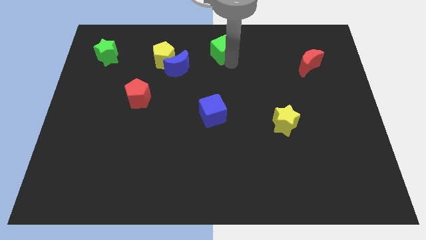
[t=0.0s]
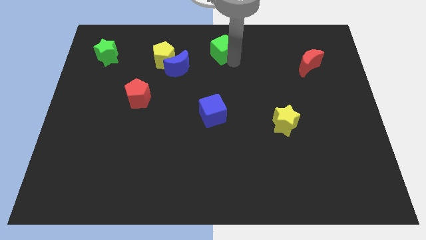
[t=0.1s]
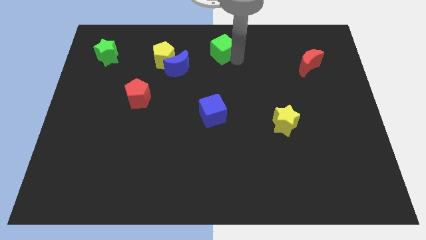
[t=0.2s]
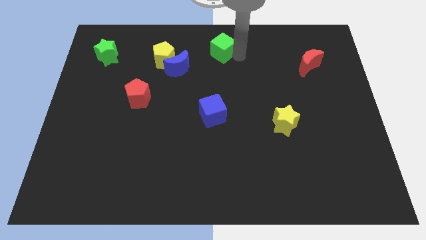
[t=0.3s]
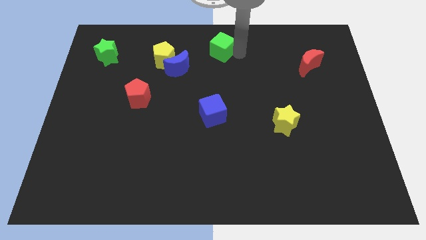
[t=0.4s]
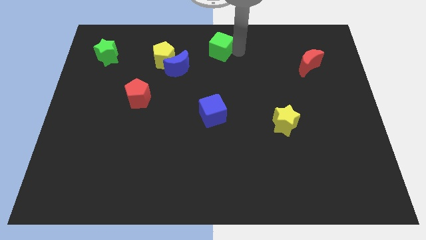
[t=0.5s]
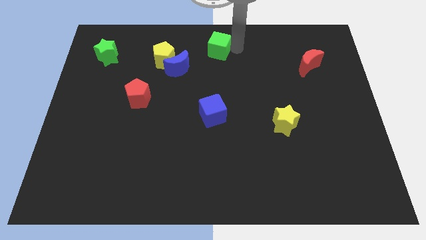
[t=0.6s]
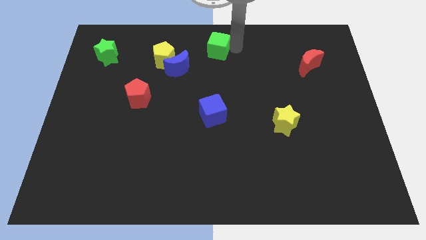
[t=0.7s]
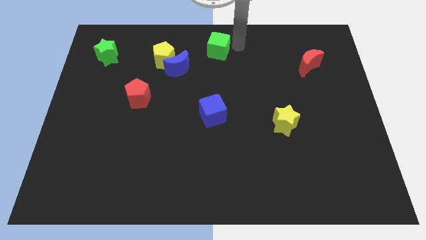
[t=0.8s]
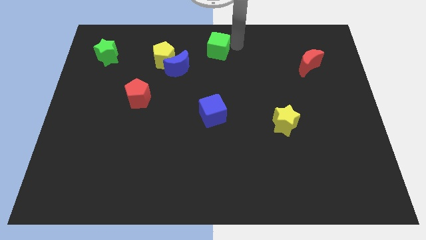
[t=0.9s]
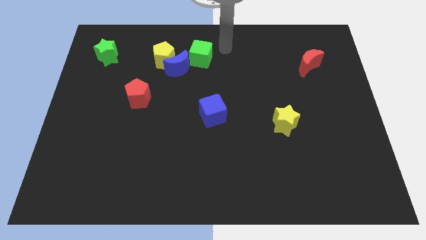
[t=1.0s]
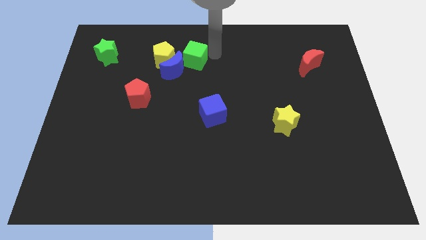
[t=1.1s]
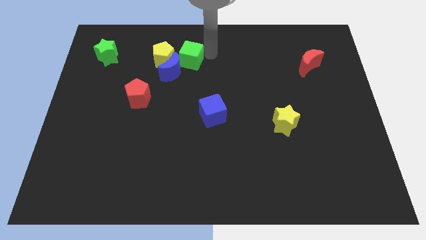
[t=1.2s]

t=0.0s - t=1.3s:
push the green cube into the blue moon

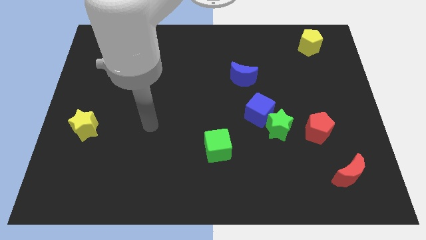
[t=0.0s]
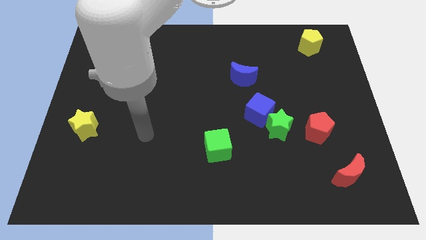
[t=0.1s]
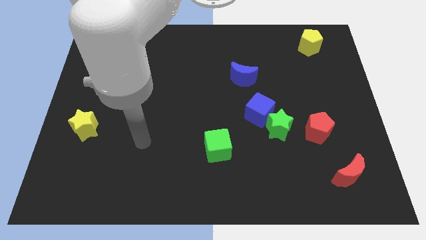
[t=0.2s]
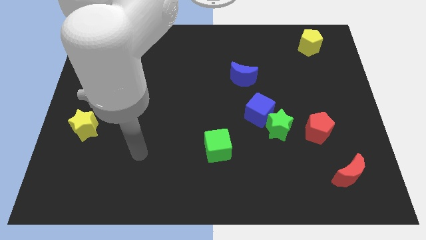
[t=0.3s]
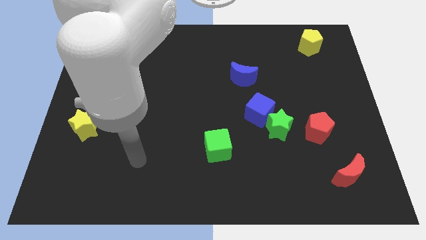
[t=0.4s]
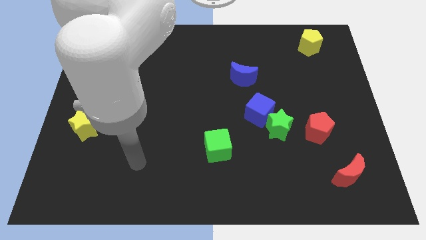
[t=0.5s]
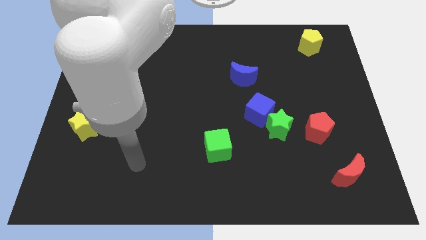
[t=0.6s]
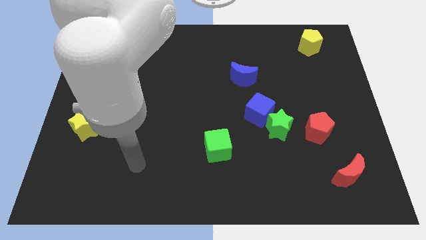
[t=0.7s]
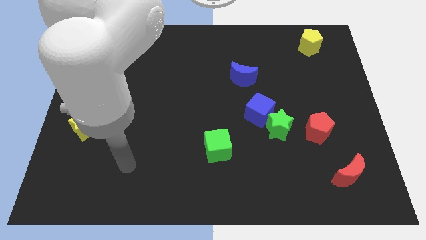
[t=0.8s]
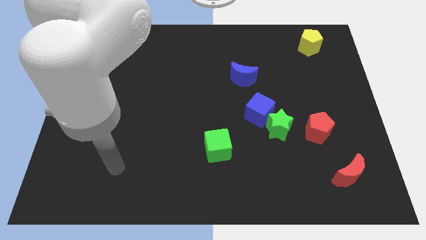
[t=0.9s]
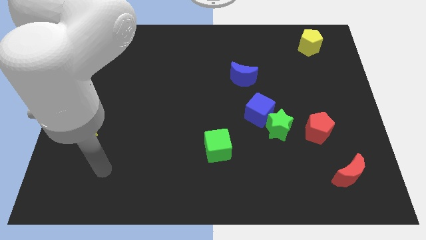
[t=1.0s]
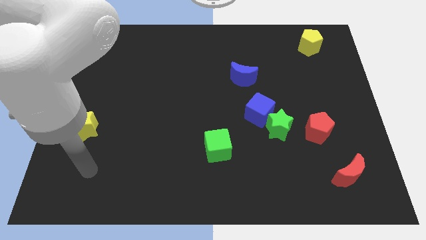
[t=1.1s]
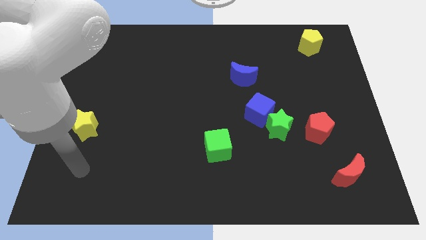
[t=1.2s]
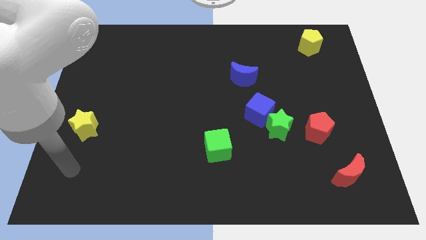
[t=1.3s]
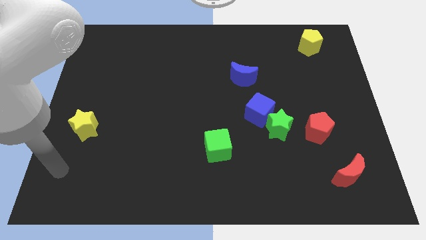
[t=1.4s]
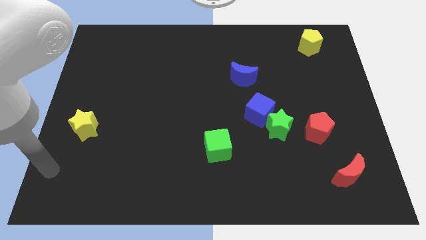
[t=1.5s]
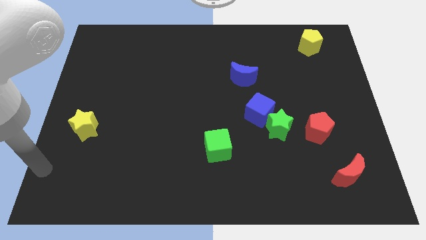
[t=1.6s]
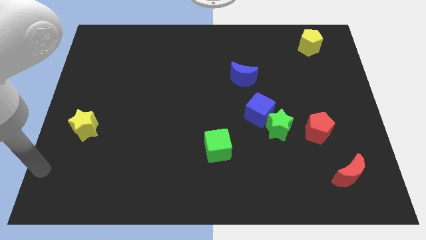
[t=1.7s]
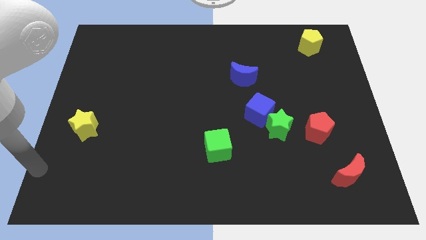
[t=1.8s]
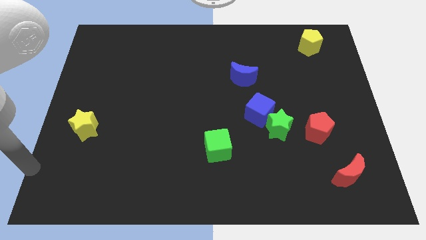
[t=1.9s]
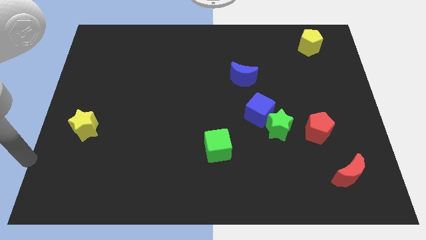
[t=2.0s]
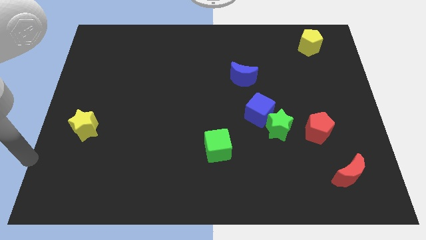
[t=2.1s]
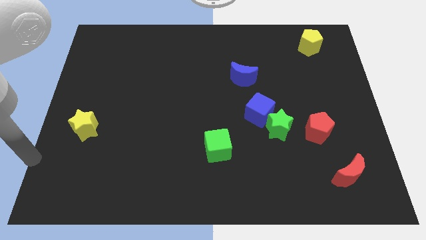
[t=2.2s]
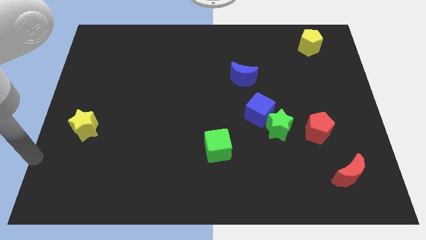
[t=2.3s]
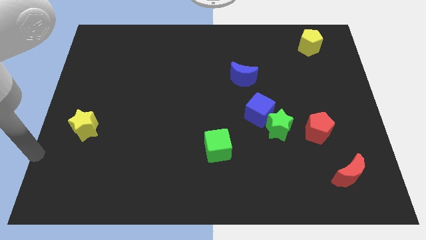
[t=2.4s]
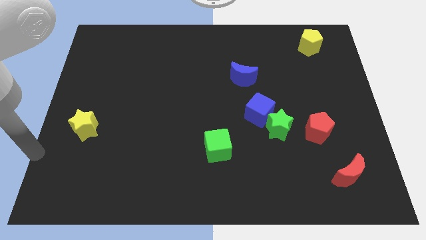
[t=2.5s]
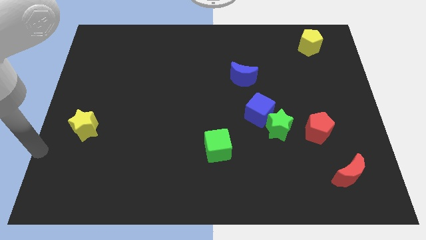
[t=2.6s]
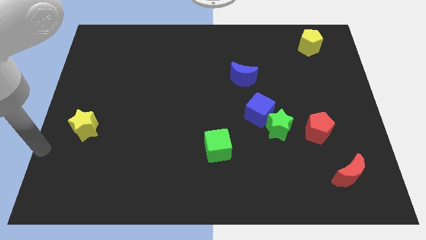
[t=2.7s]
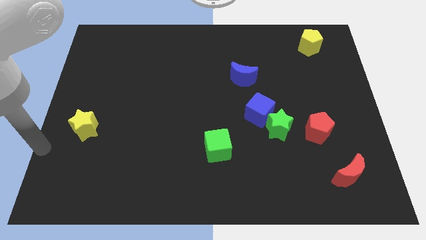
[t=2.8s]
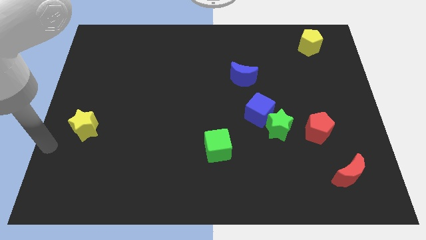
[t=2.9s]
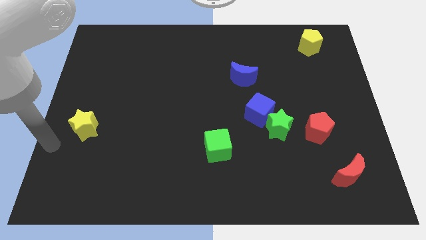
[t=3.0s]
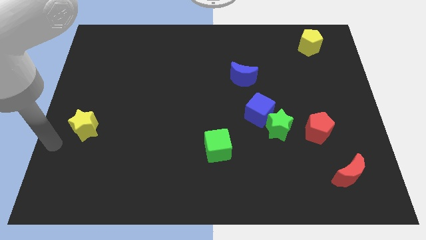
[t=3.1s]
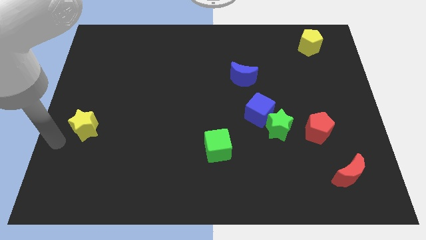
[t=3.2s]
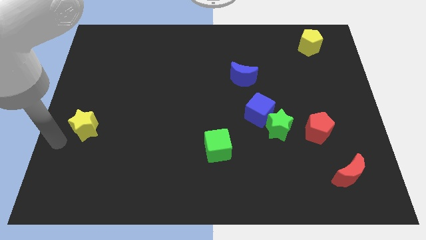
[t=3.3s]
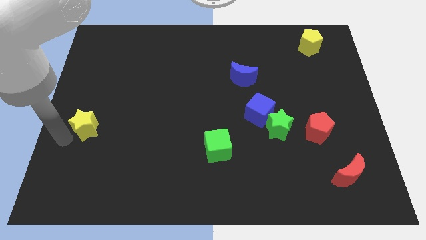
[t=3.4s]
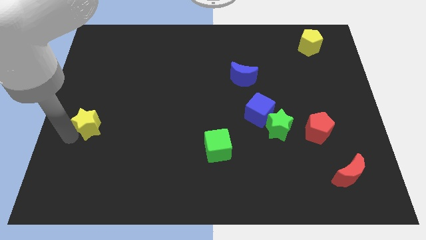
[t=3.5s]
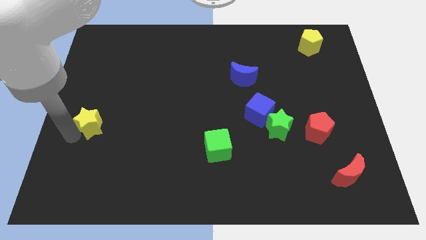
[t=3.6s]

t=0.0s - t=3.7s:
drag your hand left to the yellow pentagon

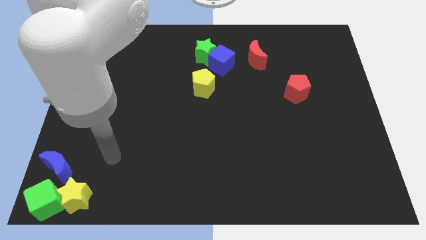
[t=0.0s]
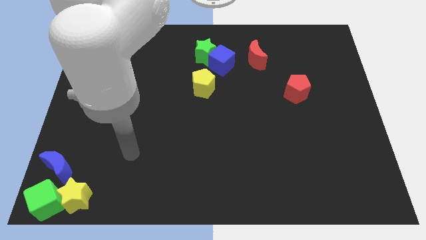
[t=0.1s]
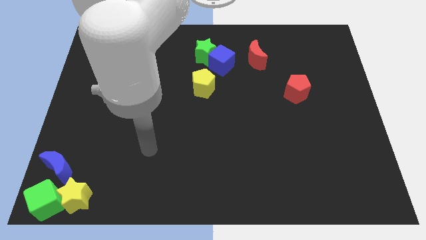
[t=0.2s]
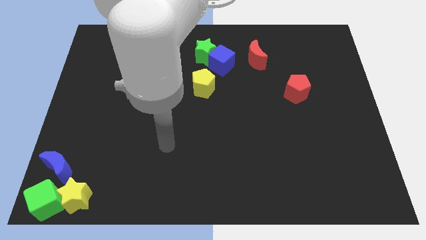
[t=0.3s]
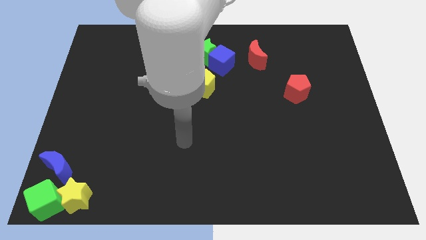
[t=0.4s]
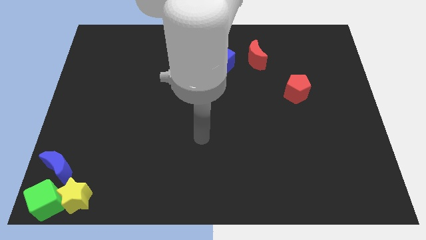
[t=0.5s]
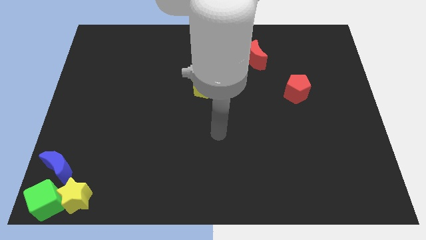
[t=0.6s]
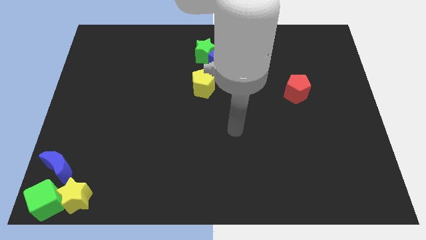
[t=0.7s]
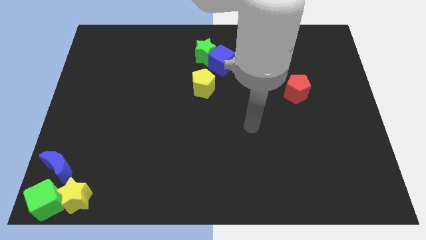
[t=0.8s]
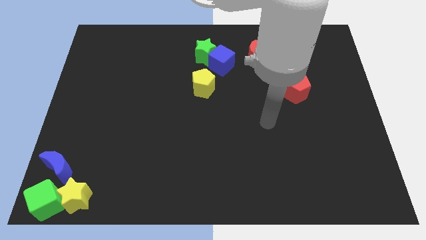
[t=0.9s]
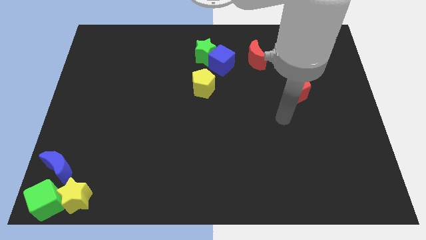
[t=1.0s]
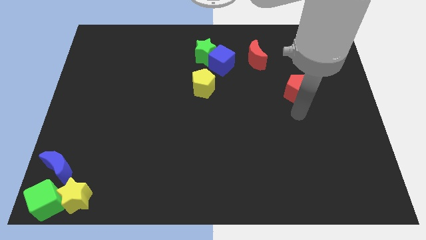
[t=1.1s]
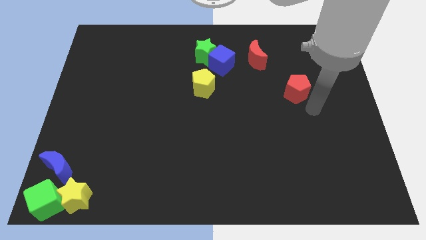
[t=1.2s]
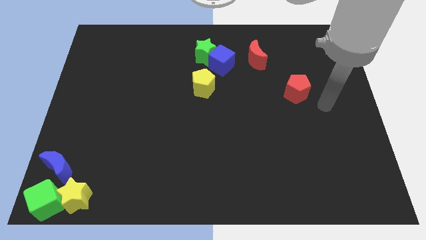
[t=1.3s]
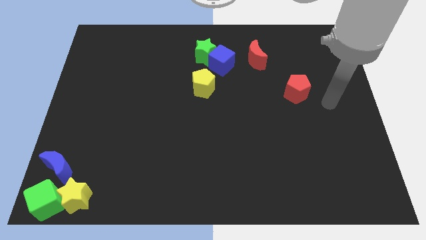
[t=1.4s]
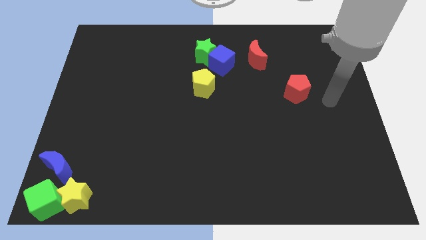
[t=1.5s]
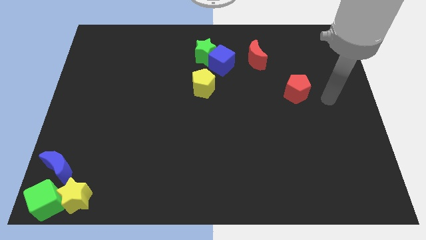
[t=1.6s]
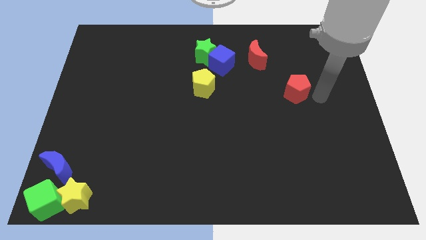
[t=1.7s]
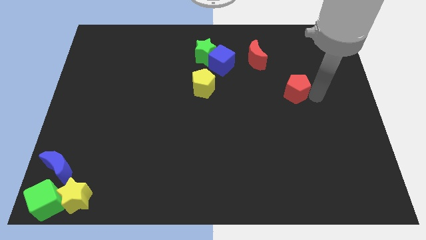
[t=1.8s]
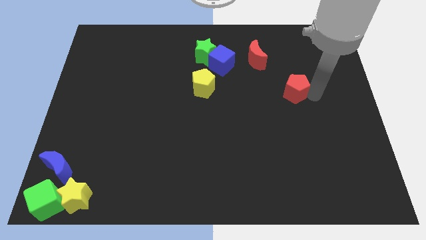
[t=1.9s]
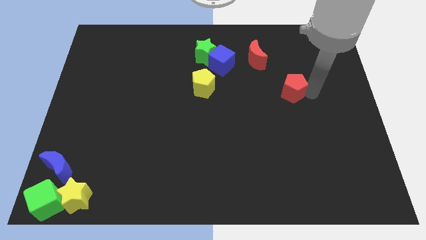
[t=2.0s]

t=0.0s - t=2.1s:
move your arm towards the right of the red pentagon

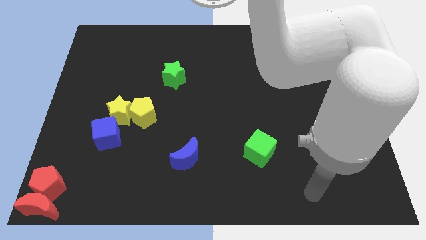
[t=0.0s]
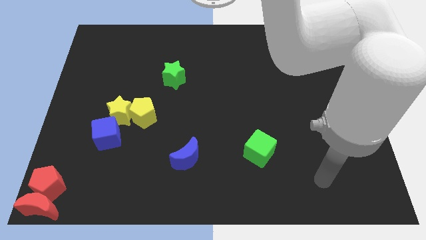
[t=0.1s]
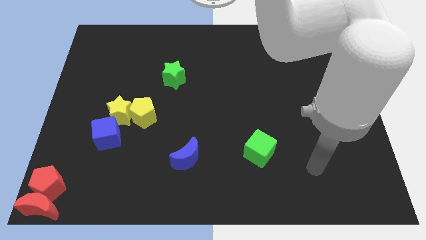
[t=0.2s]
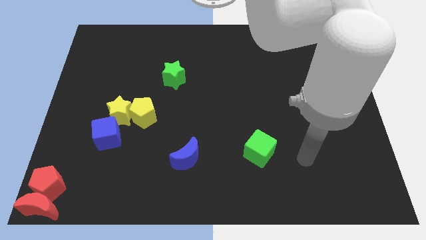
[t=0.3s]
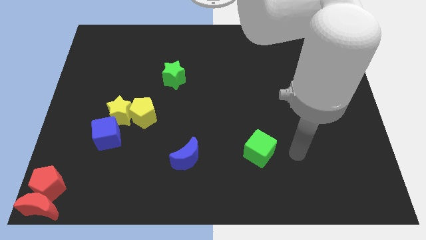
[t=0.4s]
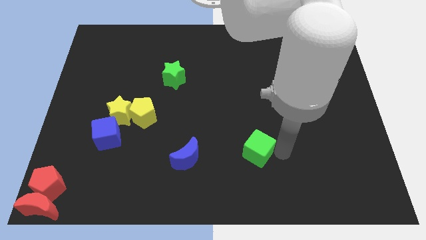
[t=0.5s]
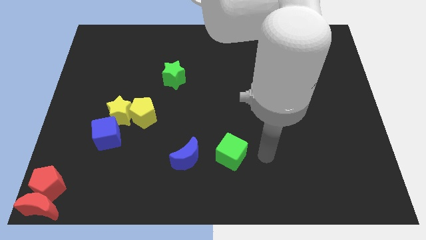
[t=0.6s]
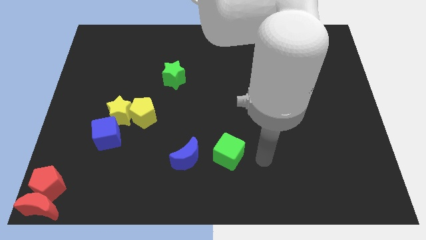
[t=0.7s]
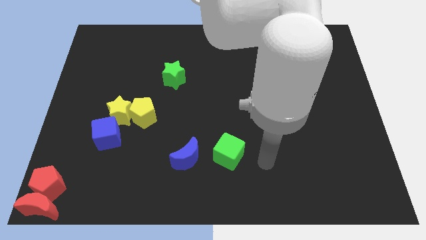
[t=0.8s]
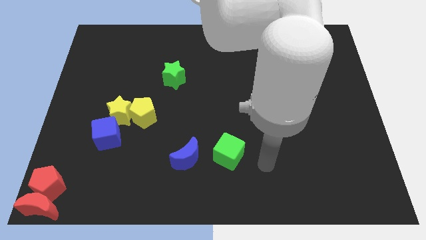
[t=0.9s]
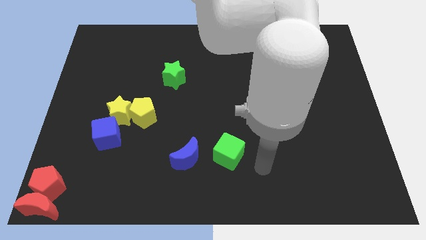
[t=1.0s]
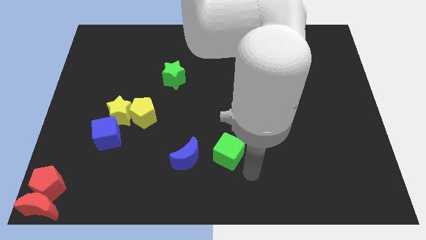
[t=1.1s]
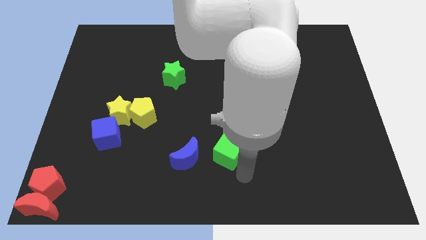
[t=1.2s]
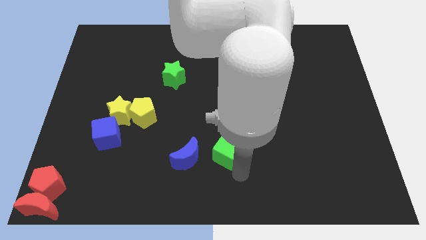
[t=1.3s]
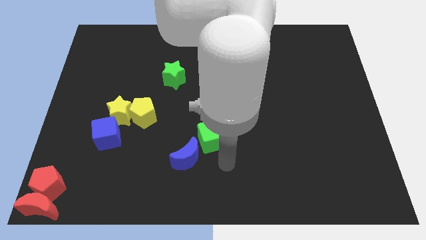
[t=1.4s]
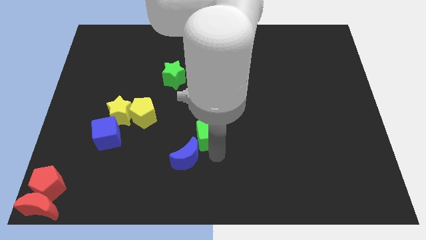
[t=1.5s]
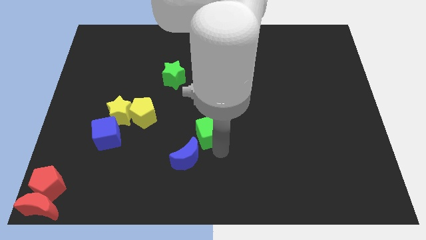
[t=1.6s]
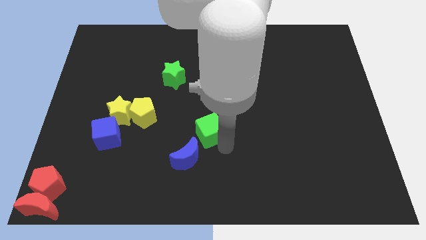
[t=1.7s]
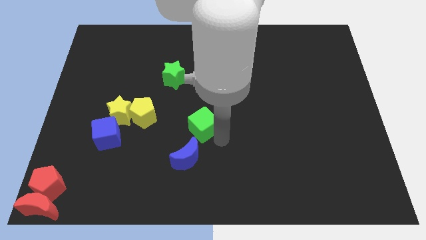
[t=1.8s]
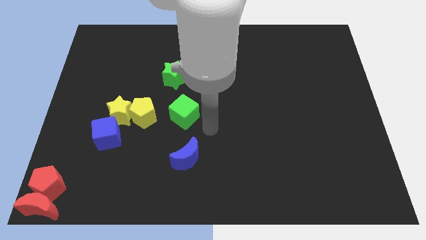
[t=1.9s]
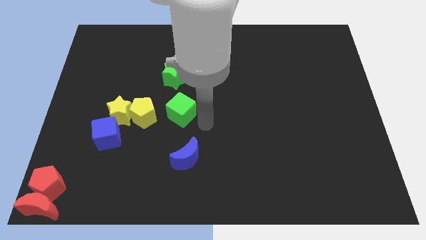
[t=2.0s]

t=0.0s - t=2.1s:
move the green cube parallel to yellow pentagon
